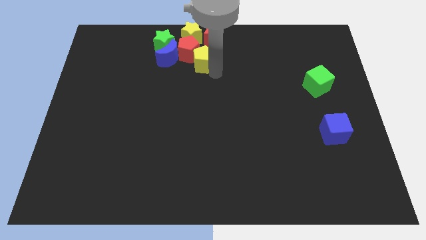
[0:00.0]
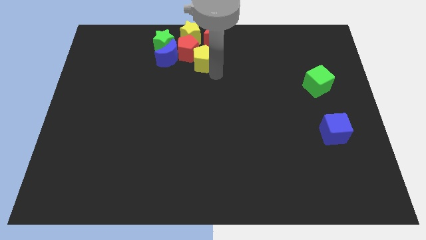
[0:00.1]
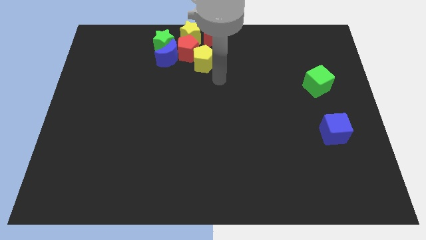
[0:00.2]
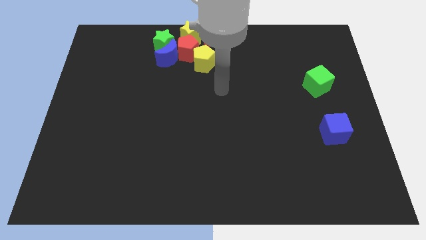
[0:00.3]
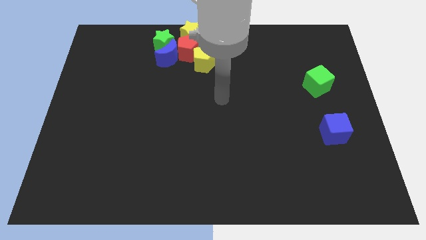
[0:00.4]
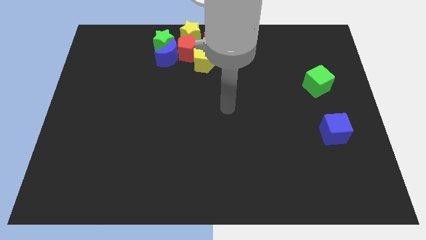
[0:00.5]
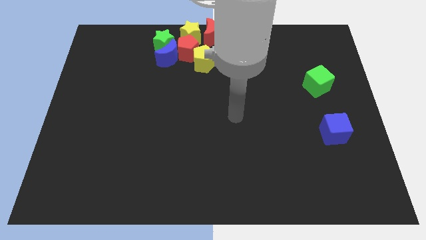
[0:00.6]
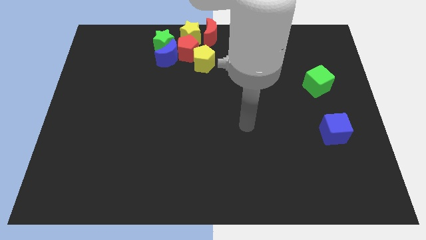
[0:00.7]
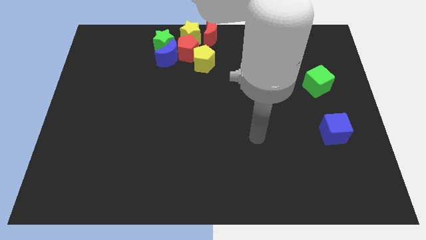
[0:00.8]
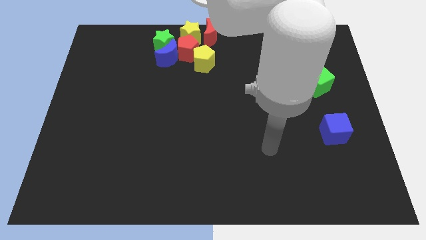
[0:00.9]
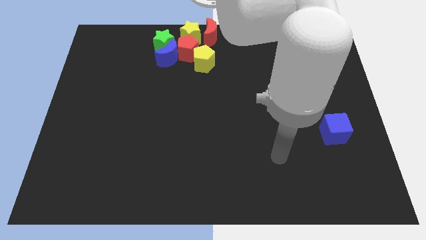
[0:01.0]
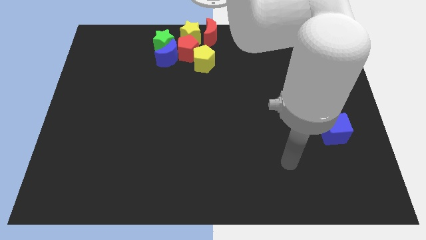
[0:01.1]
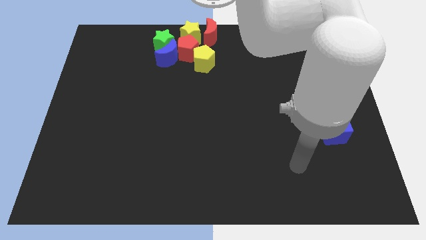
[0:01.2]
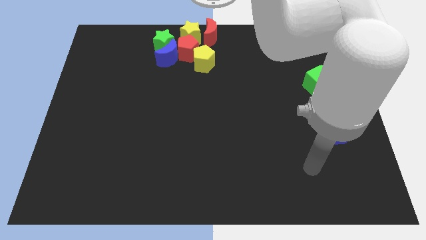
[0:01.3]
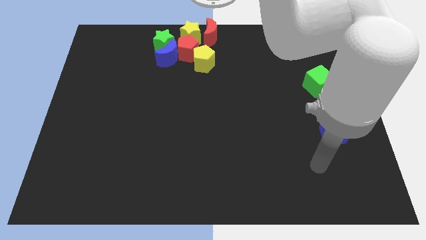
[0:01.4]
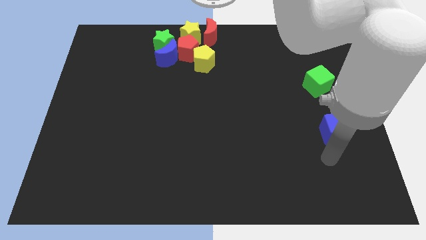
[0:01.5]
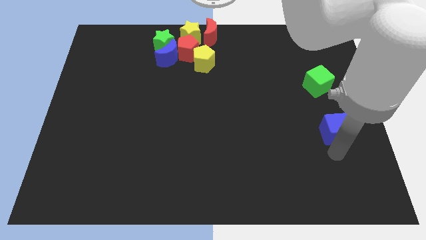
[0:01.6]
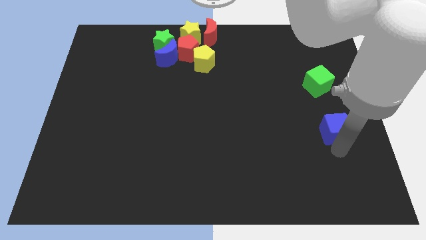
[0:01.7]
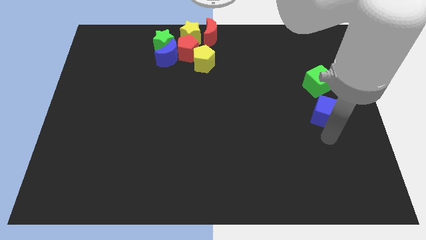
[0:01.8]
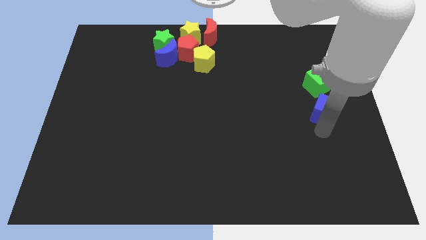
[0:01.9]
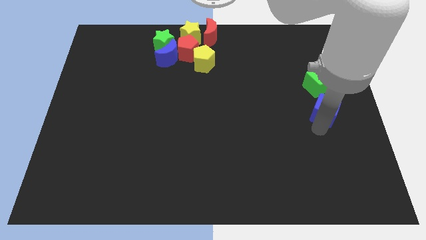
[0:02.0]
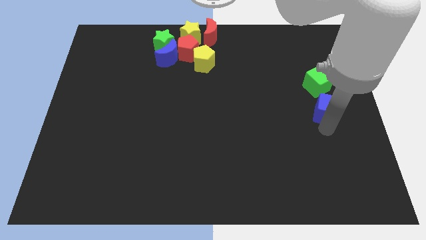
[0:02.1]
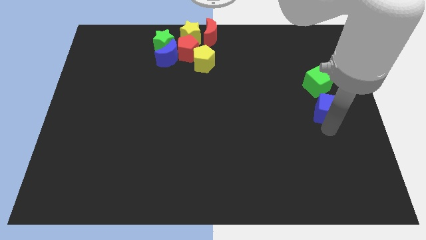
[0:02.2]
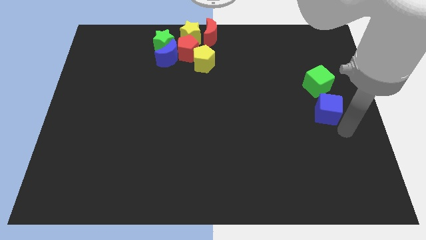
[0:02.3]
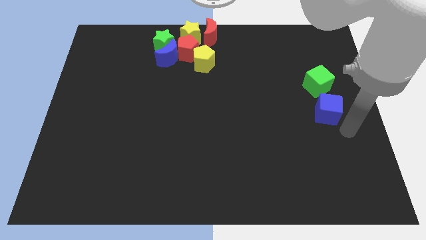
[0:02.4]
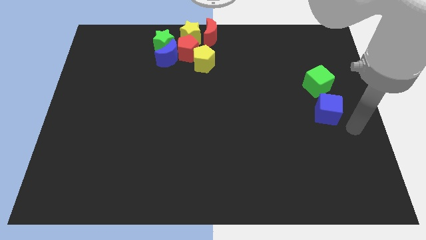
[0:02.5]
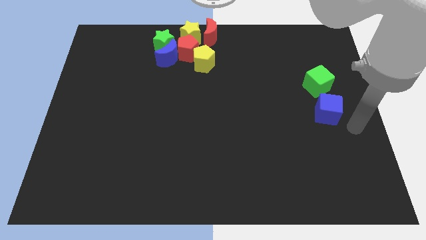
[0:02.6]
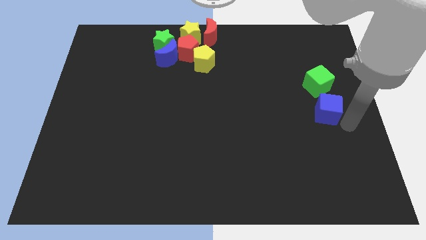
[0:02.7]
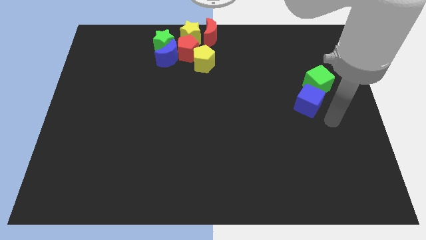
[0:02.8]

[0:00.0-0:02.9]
move your arm right to the blue cube

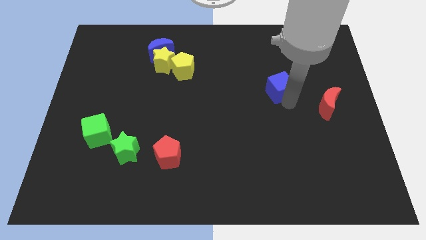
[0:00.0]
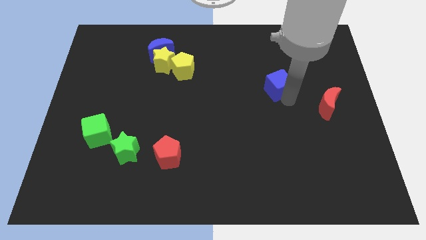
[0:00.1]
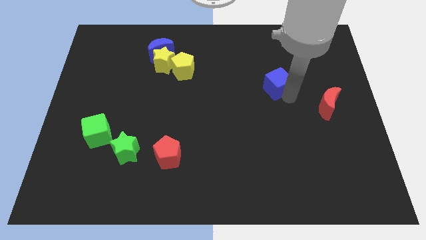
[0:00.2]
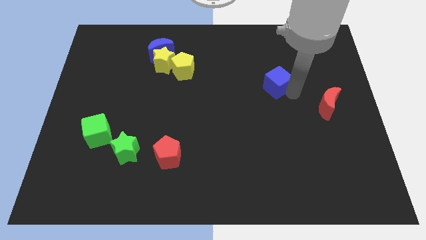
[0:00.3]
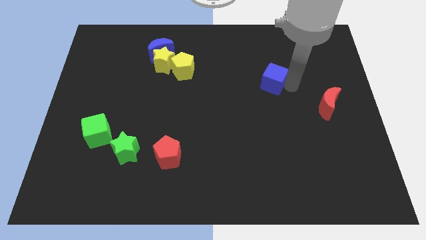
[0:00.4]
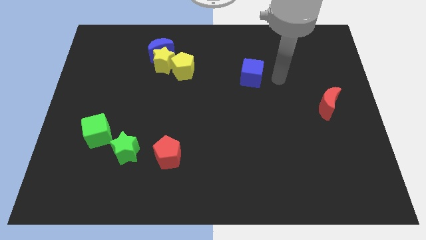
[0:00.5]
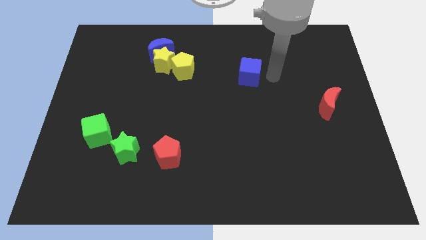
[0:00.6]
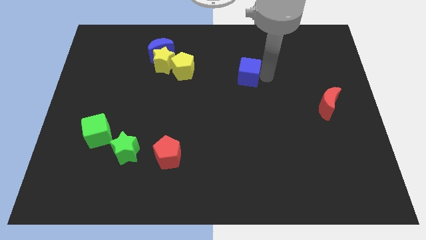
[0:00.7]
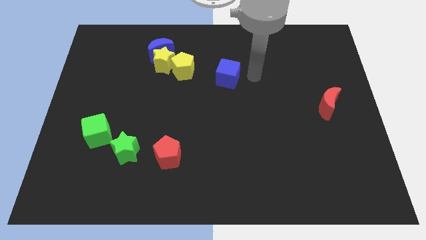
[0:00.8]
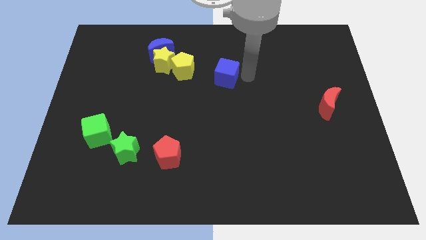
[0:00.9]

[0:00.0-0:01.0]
move the blue cube diagonal to top right of the red pentagon

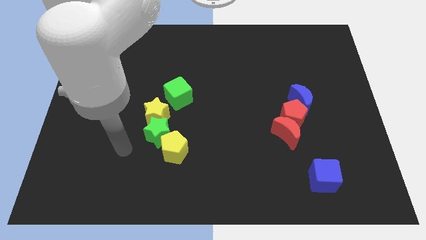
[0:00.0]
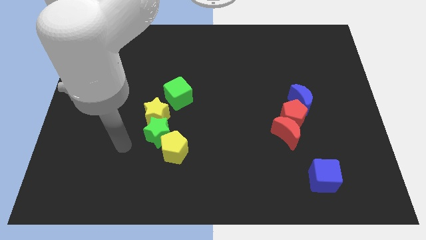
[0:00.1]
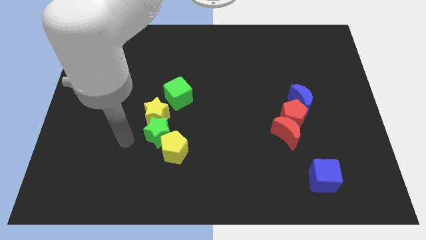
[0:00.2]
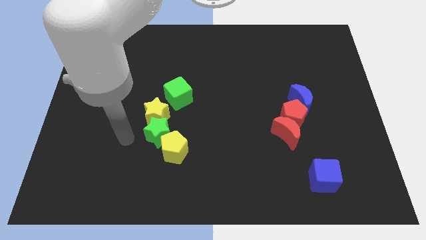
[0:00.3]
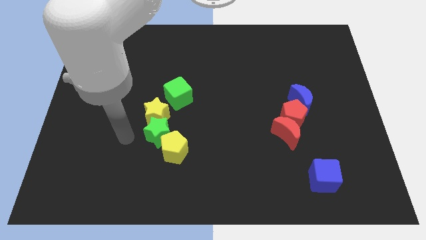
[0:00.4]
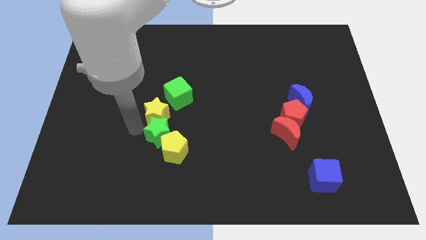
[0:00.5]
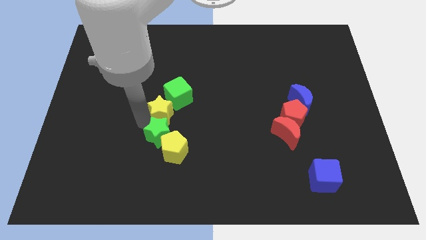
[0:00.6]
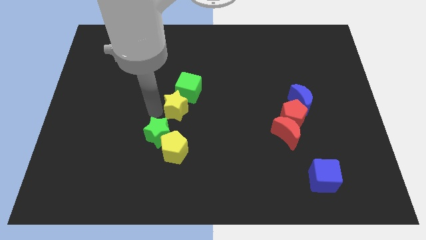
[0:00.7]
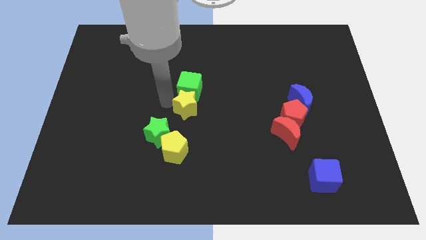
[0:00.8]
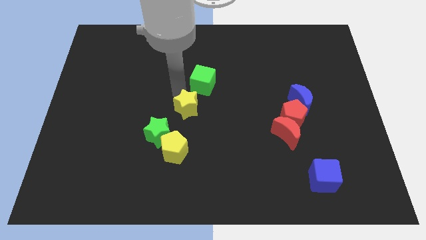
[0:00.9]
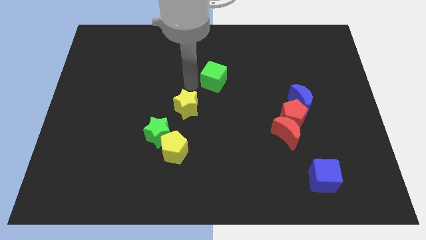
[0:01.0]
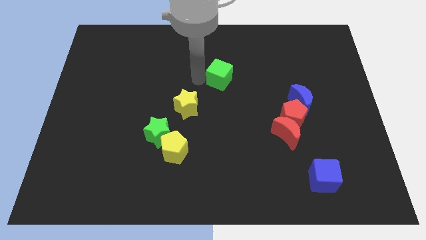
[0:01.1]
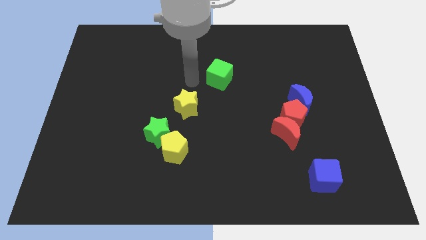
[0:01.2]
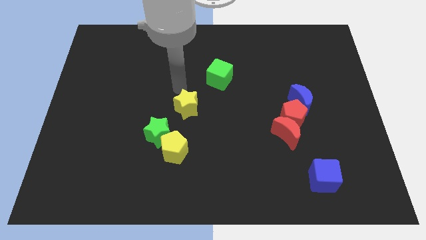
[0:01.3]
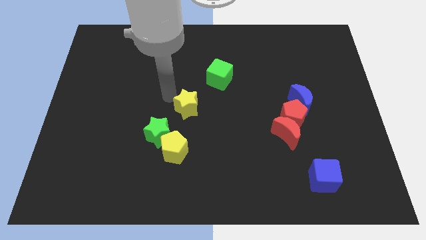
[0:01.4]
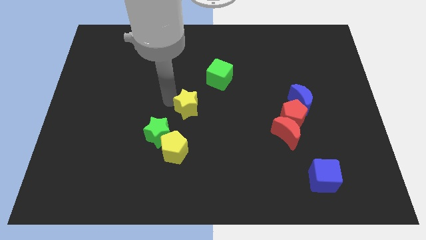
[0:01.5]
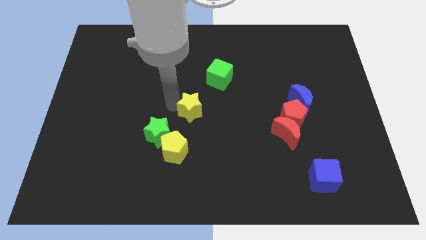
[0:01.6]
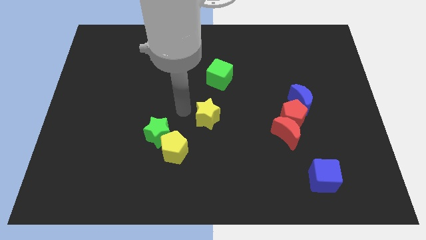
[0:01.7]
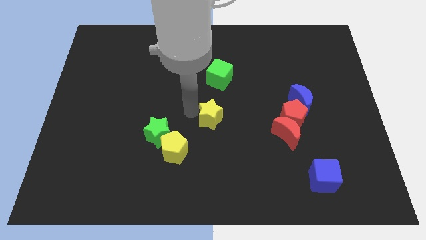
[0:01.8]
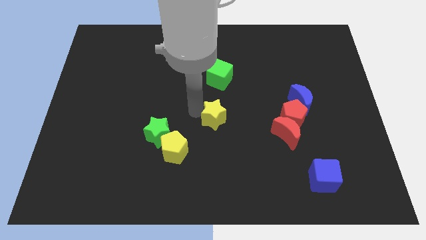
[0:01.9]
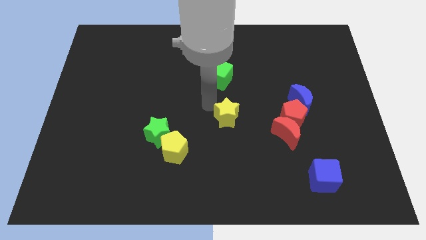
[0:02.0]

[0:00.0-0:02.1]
slide the yellow star at the center

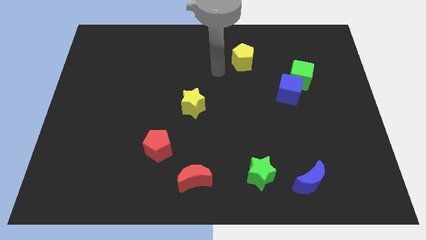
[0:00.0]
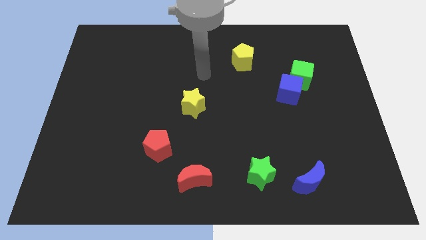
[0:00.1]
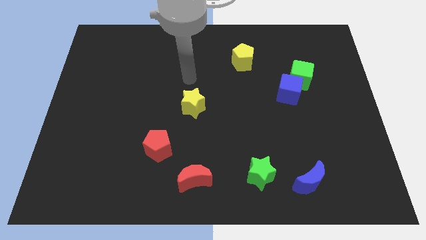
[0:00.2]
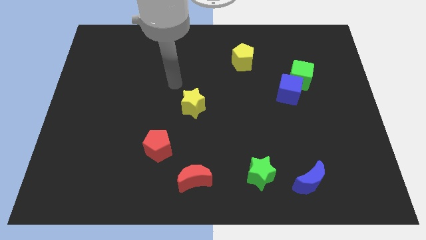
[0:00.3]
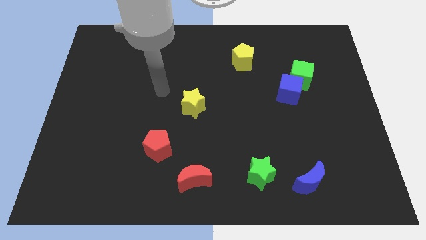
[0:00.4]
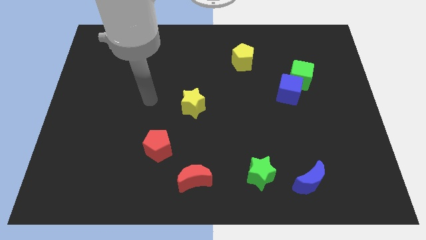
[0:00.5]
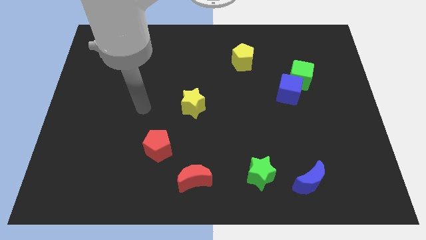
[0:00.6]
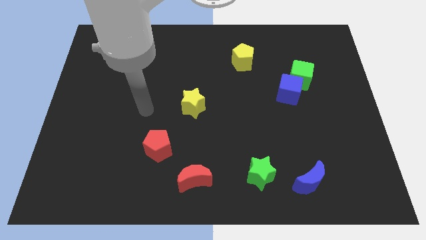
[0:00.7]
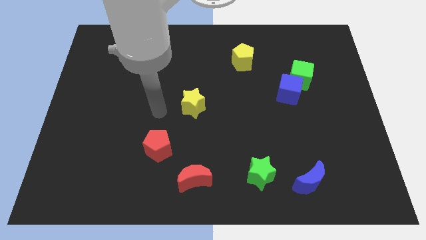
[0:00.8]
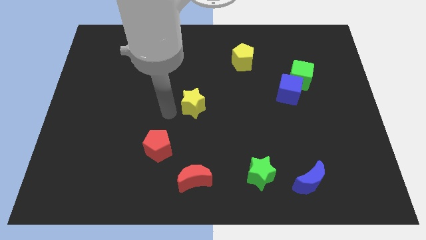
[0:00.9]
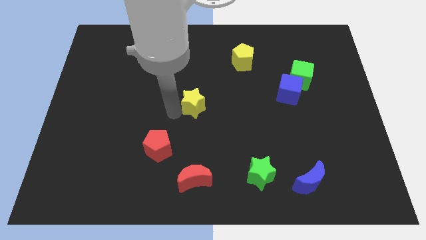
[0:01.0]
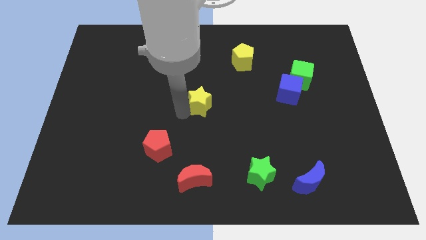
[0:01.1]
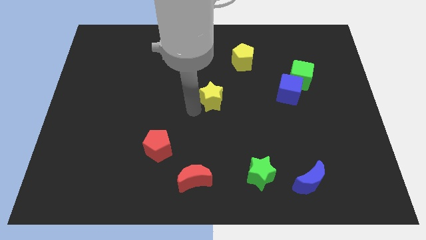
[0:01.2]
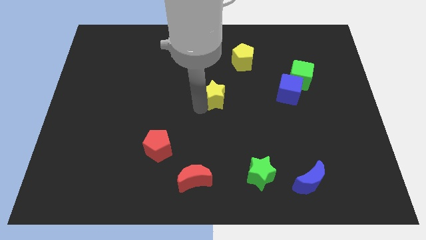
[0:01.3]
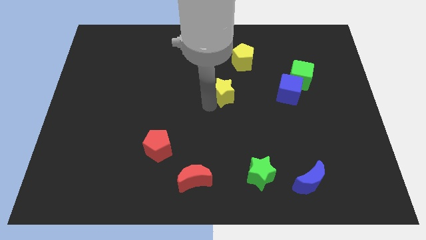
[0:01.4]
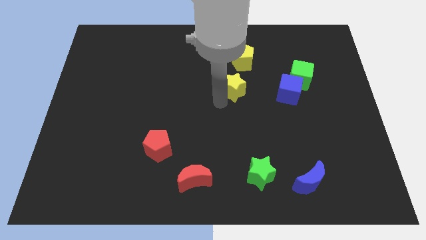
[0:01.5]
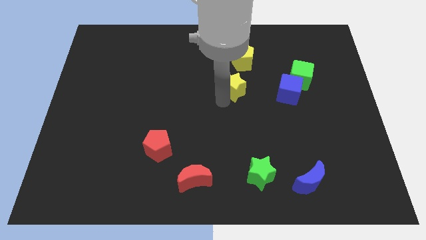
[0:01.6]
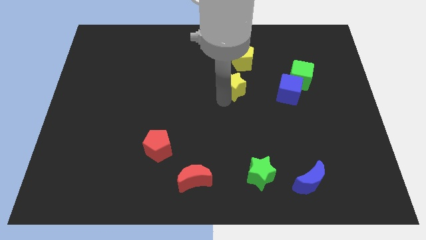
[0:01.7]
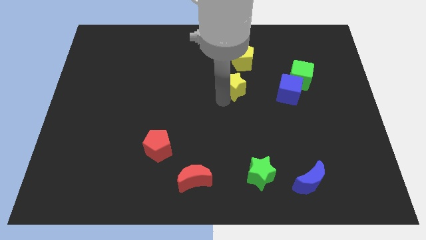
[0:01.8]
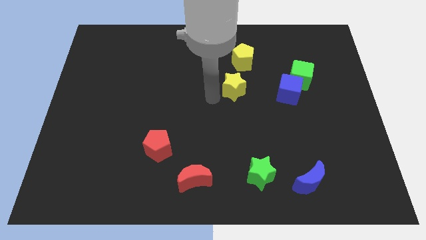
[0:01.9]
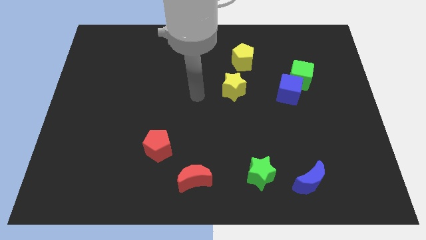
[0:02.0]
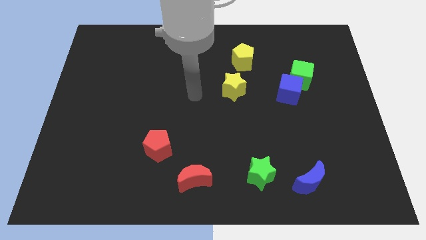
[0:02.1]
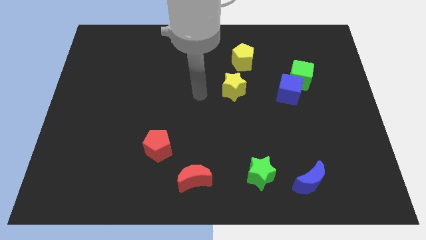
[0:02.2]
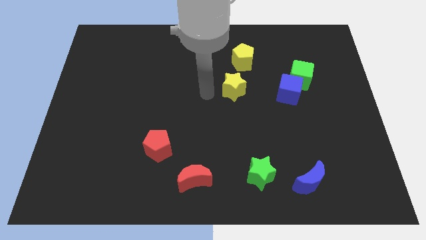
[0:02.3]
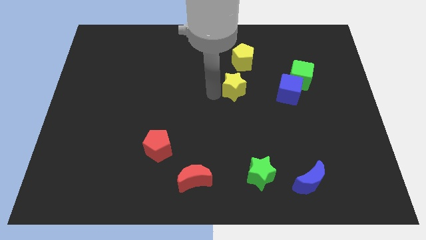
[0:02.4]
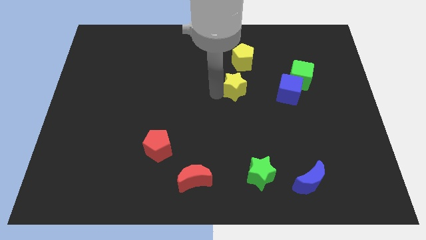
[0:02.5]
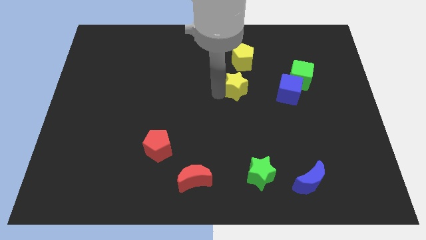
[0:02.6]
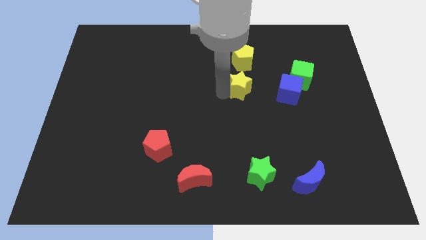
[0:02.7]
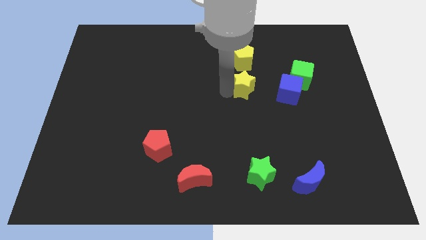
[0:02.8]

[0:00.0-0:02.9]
place the yellow star at the bottom side of the yellow pentagon

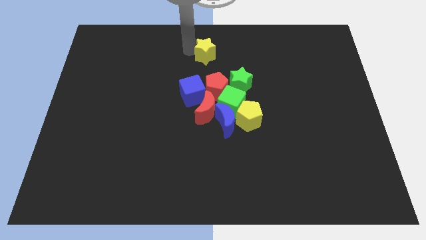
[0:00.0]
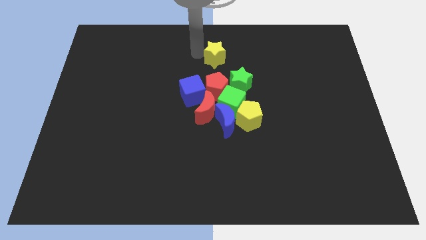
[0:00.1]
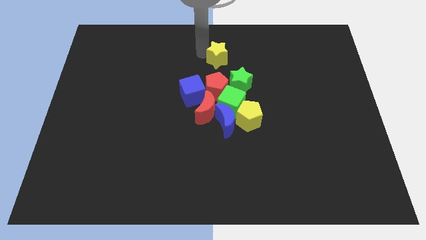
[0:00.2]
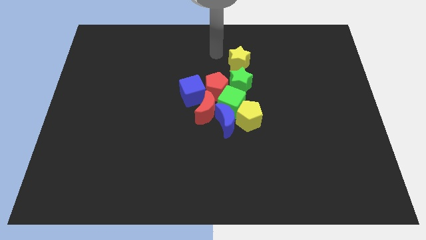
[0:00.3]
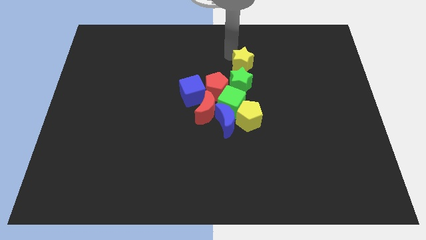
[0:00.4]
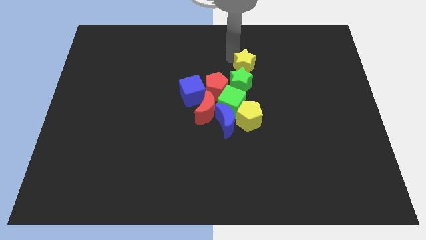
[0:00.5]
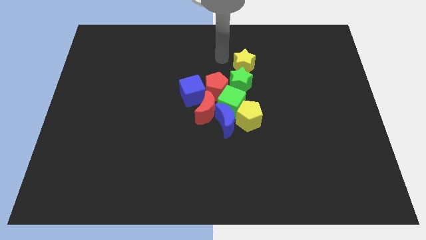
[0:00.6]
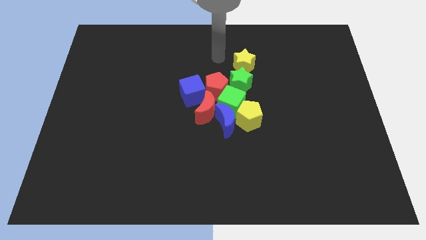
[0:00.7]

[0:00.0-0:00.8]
place the yellow star upwards to the green star
